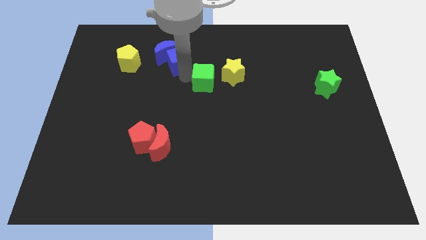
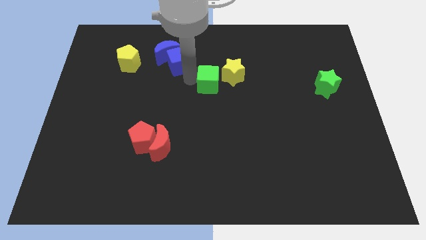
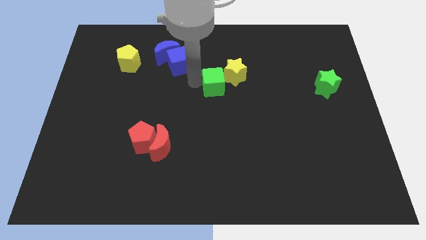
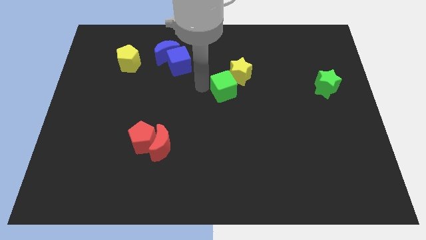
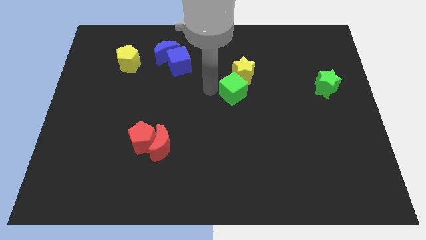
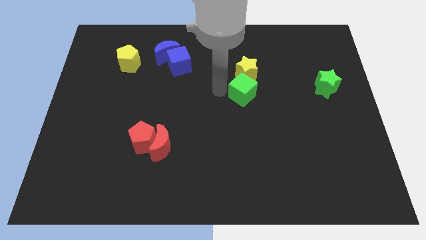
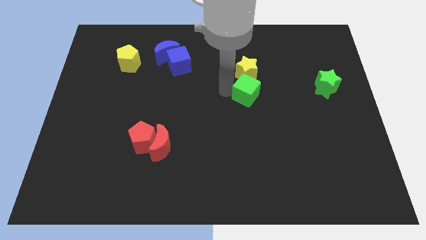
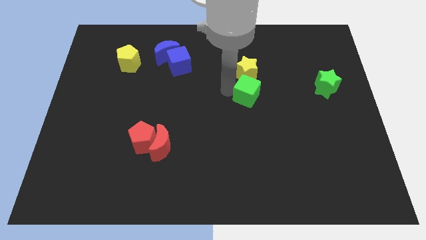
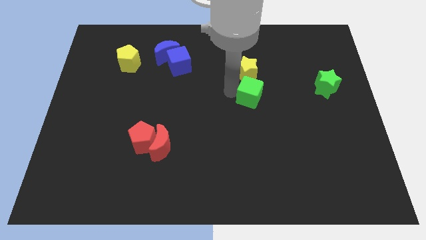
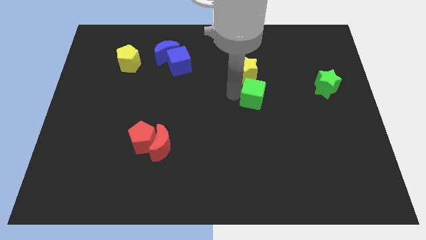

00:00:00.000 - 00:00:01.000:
place the green cube down to the yellow star

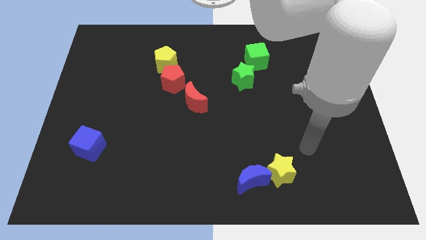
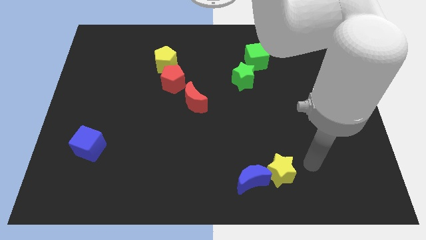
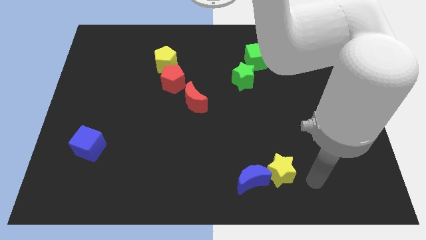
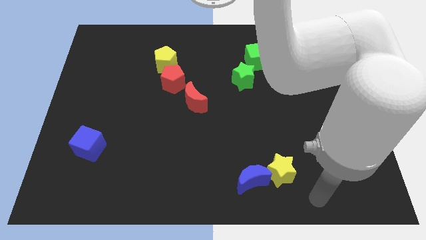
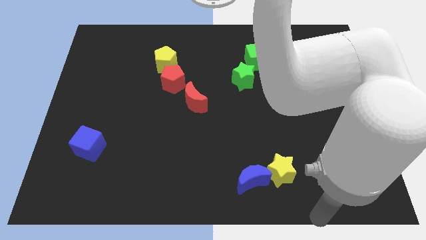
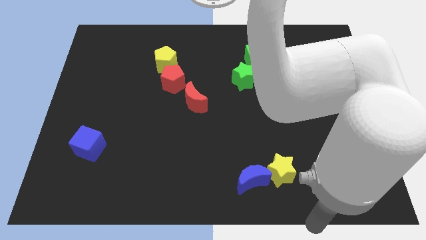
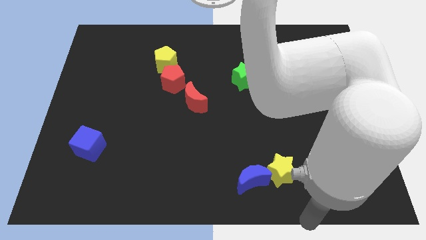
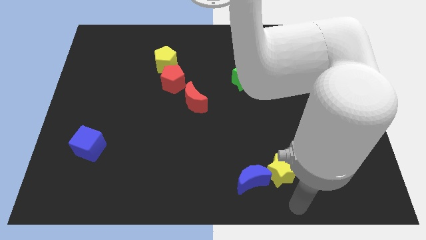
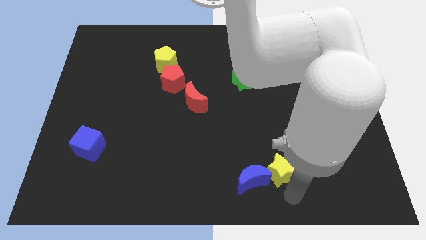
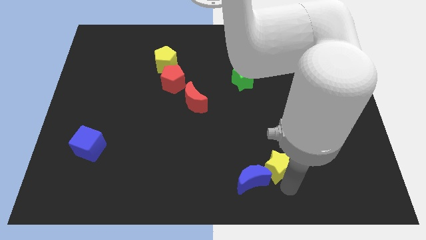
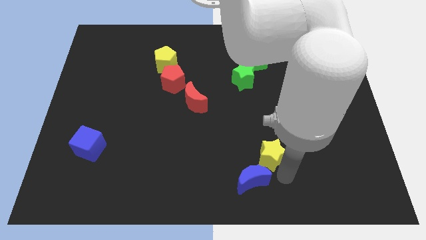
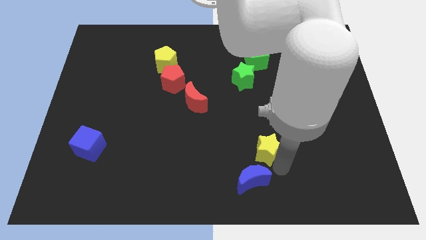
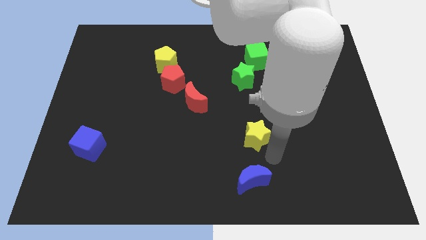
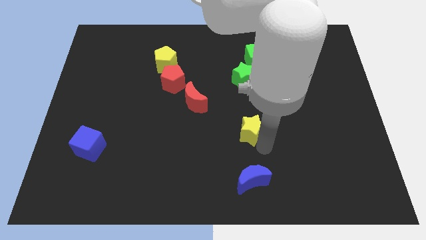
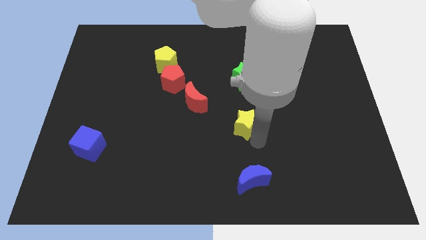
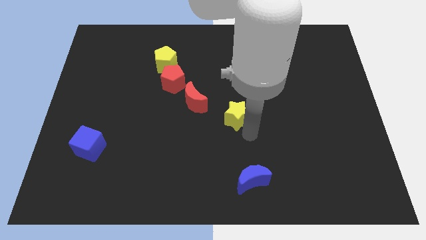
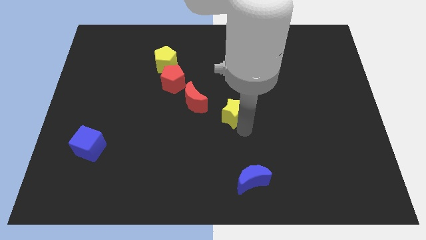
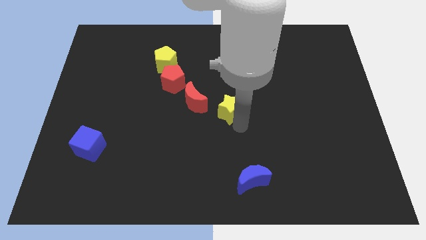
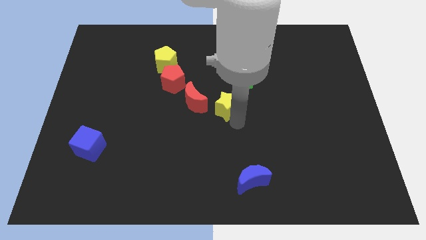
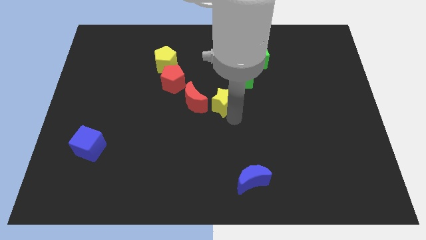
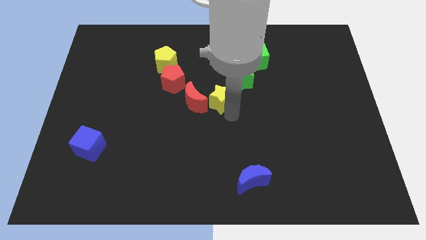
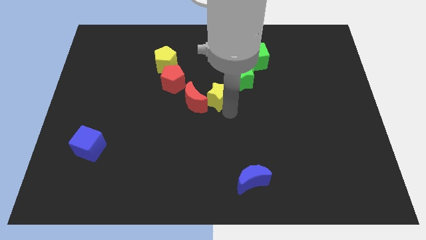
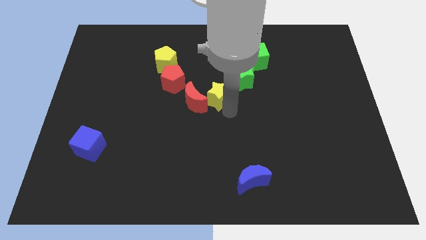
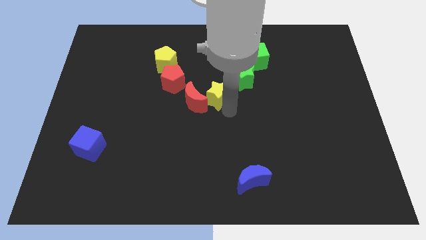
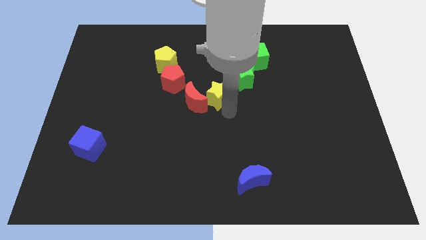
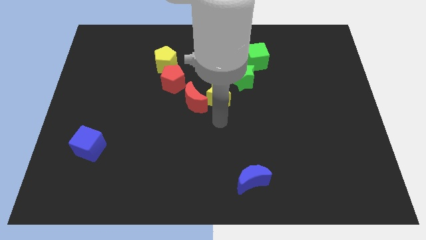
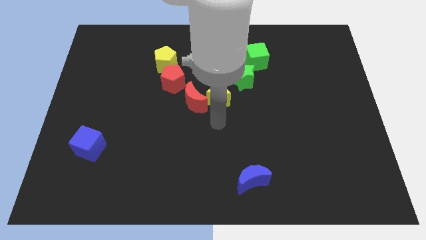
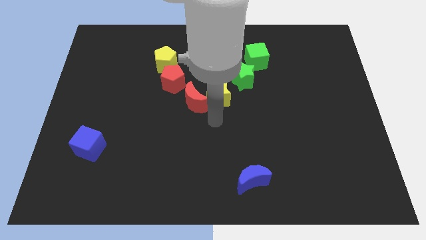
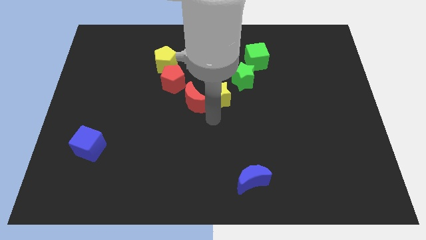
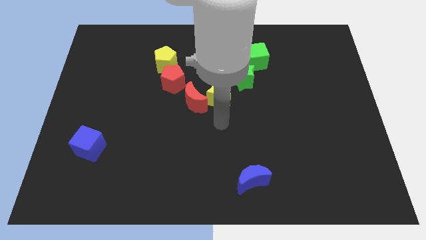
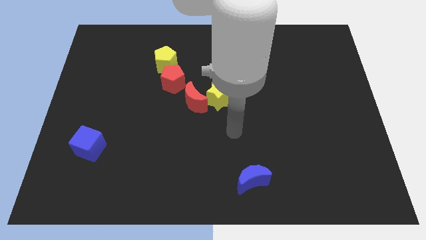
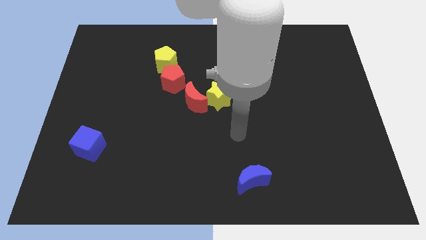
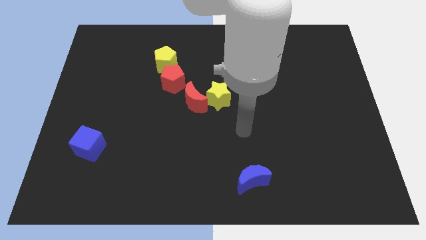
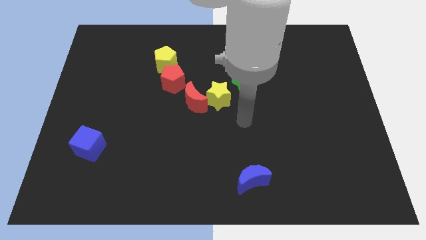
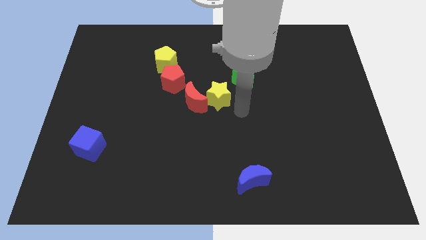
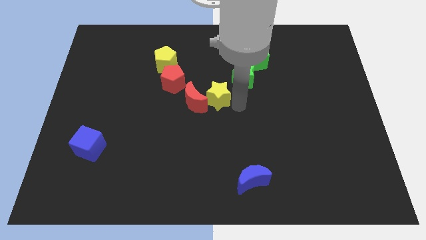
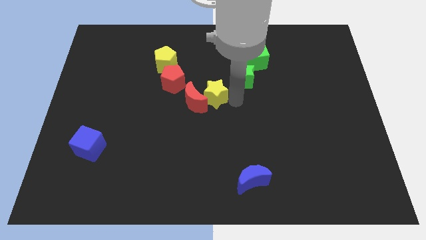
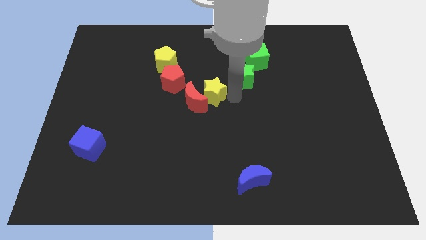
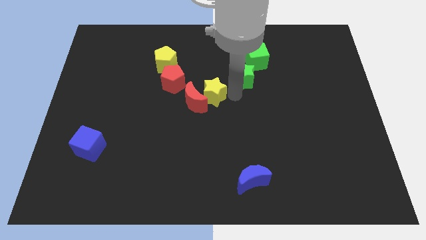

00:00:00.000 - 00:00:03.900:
drag yellow star to the center of the board

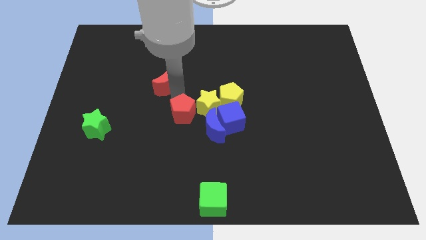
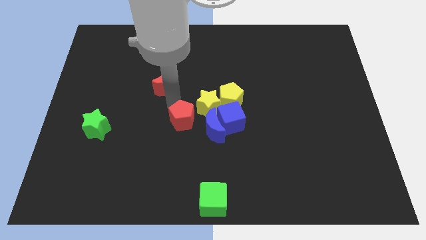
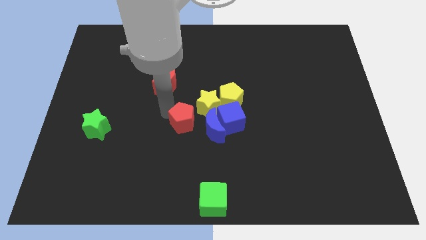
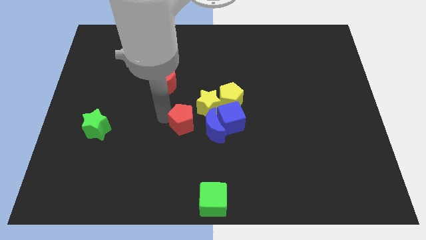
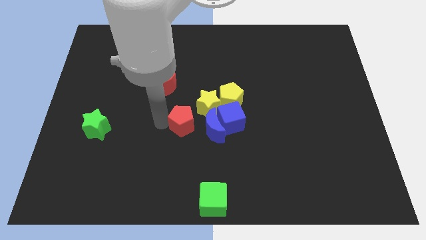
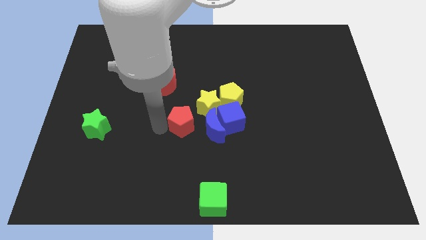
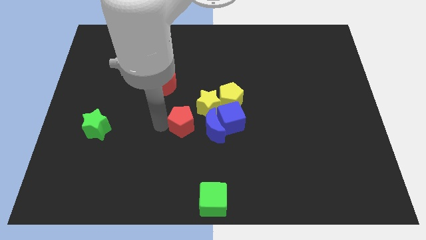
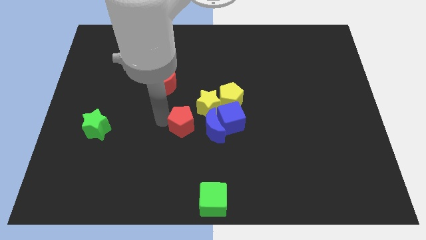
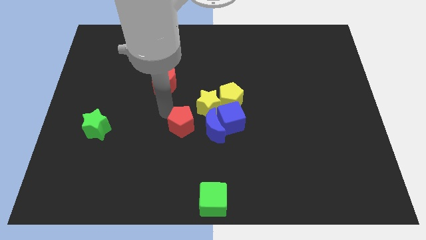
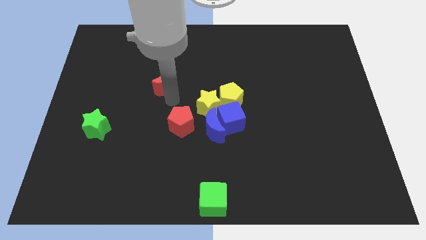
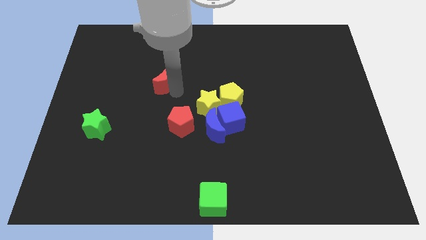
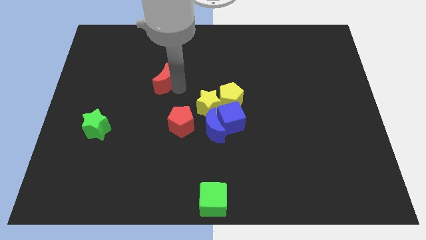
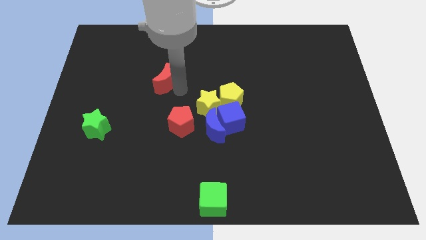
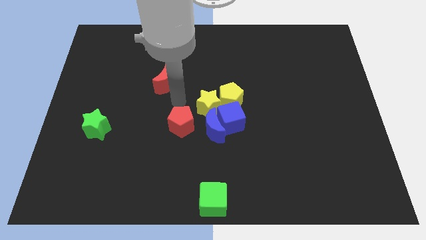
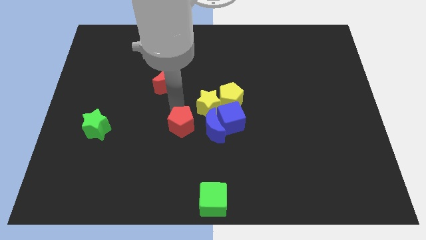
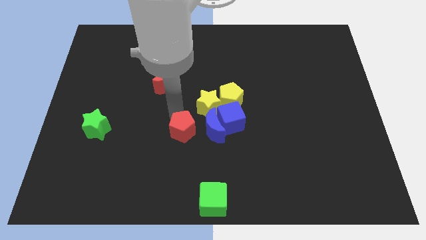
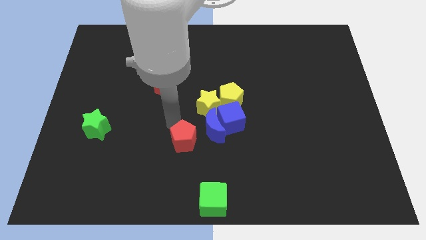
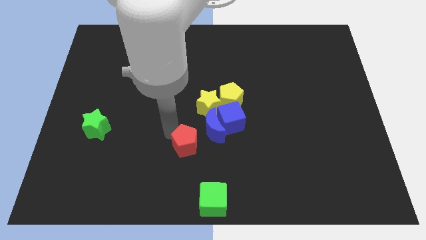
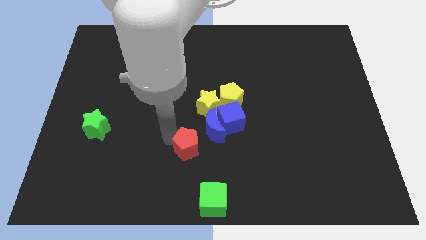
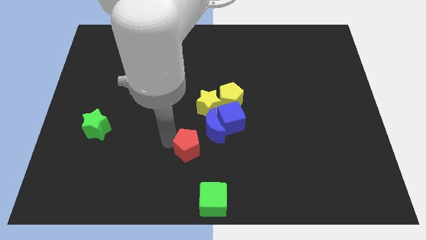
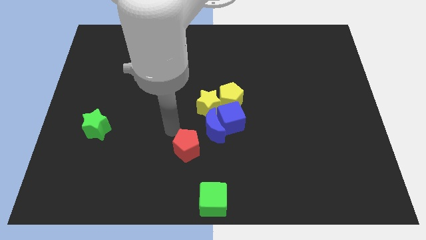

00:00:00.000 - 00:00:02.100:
push the red pentagon slightly downwards

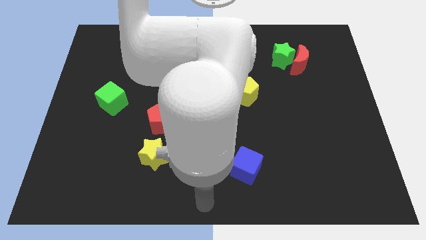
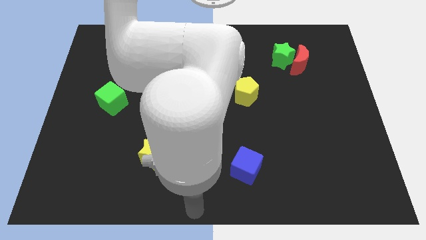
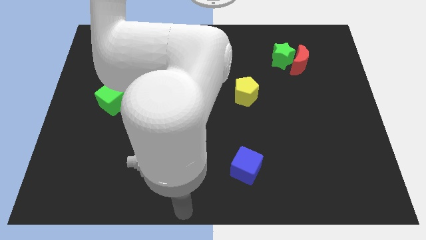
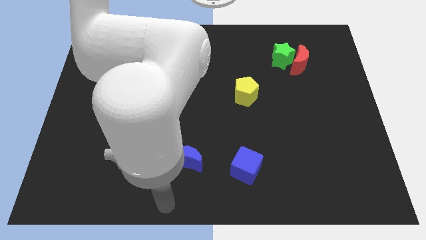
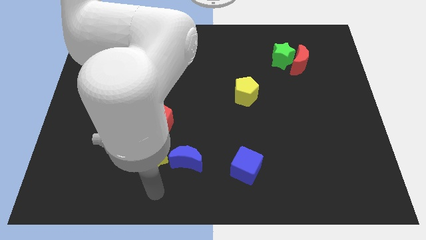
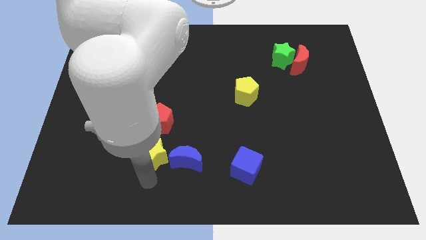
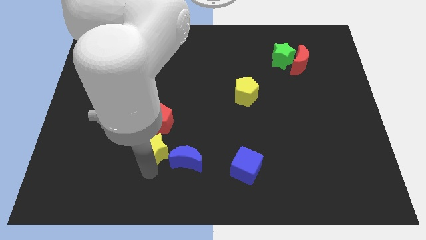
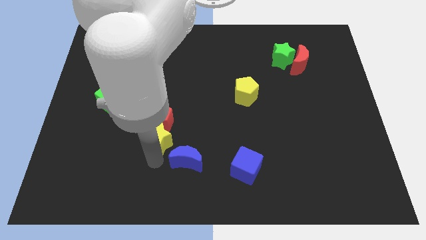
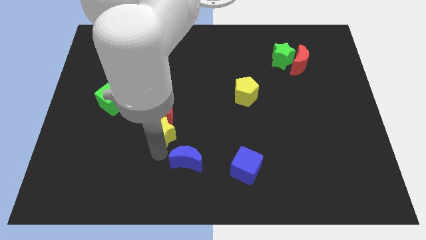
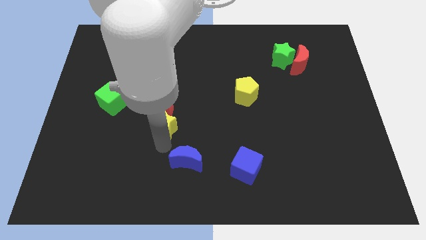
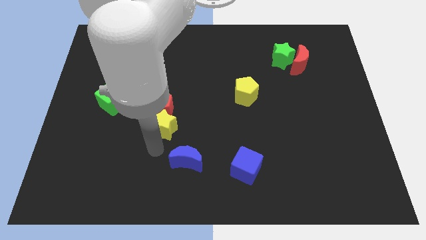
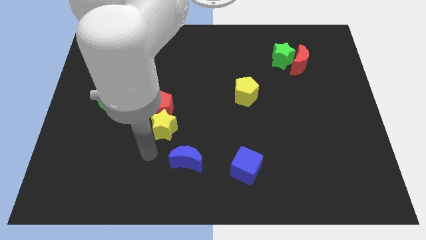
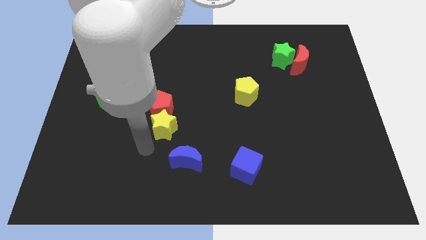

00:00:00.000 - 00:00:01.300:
point your arm below yellow star

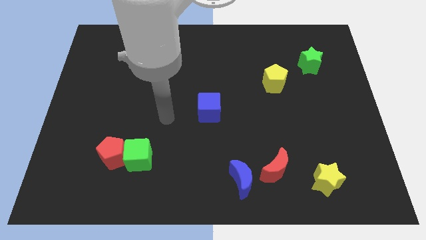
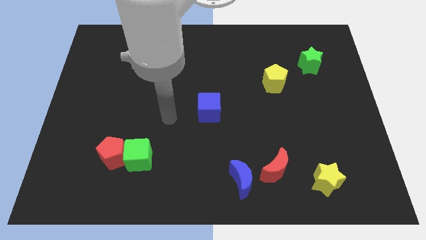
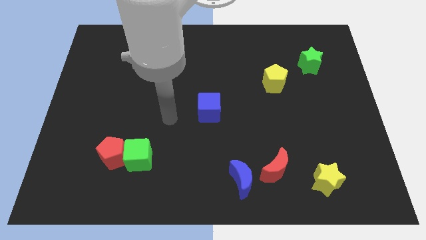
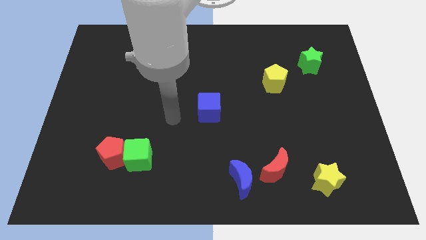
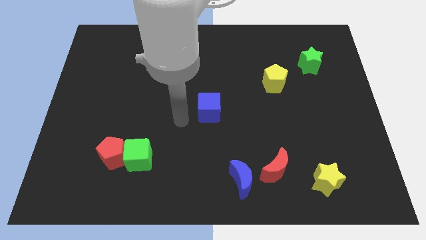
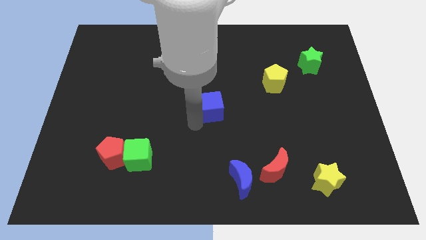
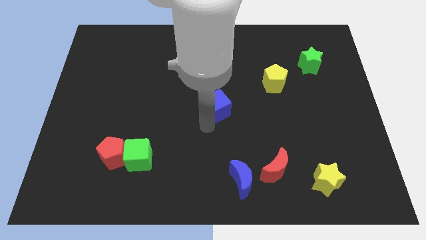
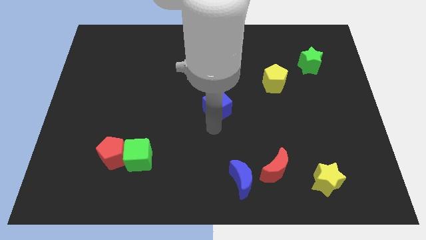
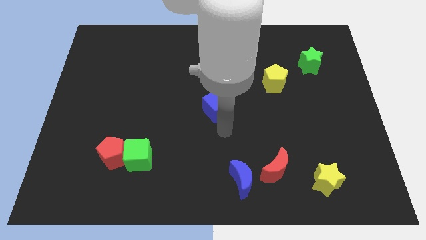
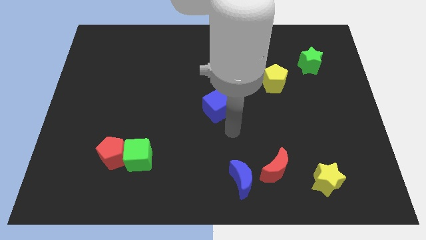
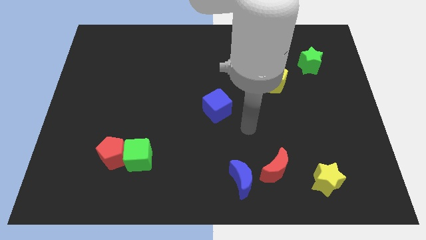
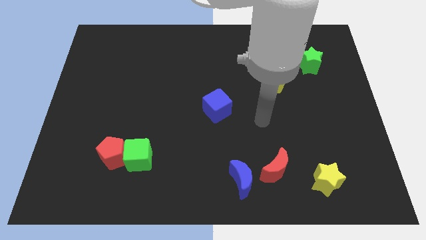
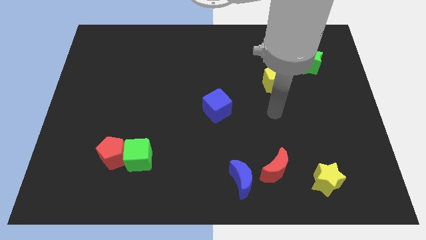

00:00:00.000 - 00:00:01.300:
go and tap the blue cube
